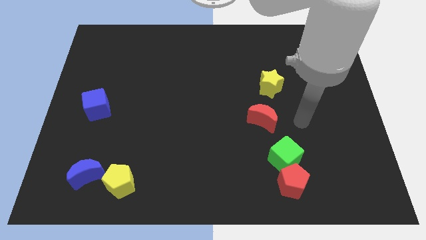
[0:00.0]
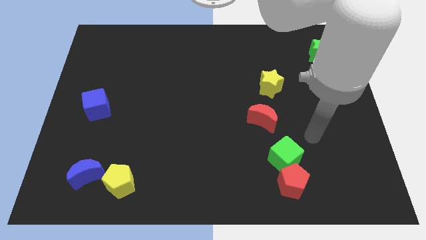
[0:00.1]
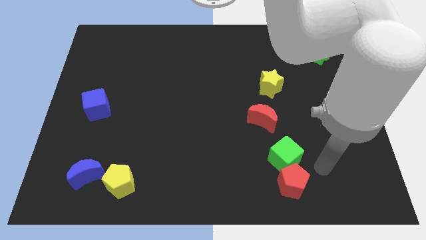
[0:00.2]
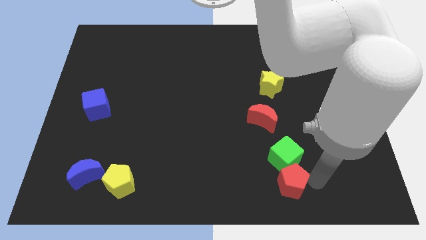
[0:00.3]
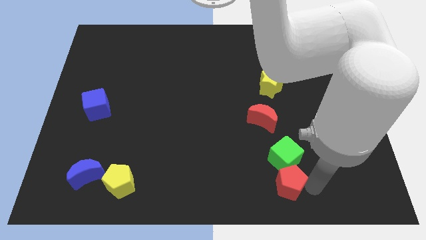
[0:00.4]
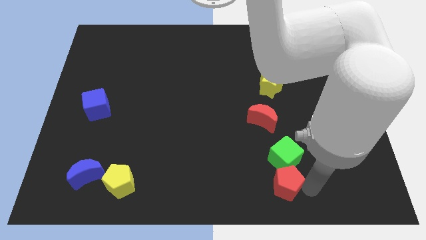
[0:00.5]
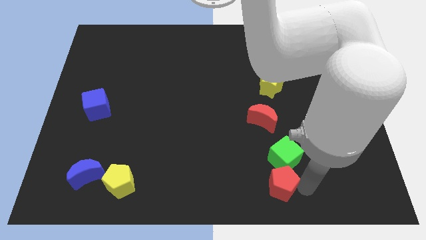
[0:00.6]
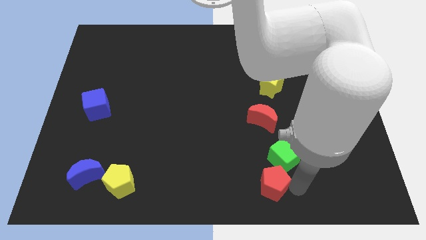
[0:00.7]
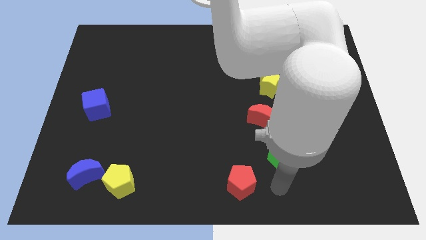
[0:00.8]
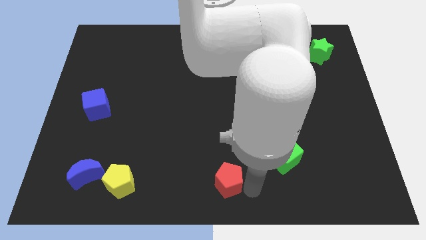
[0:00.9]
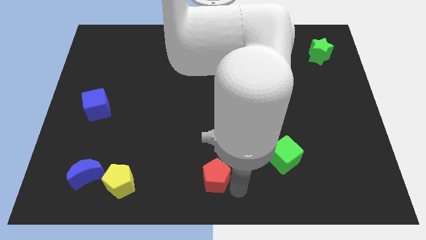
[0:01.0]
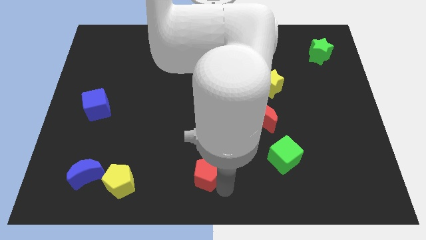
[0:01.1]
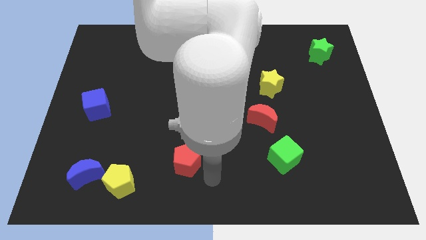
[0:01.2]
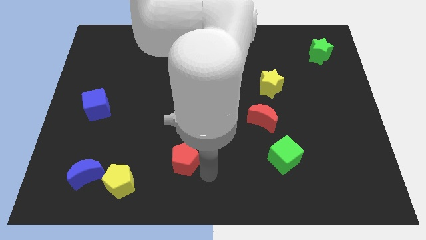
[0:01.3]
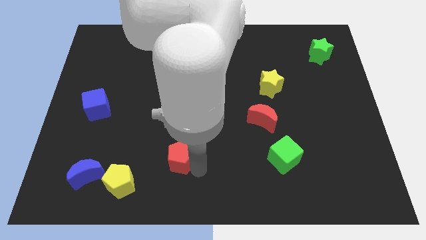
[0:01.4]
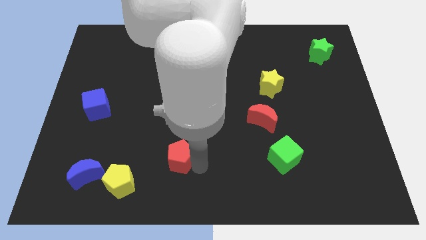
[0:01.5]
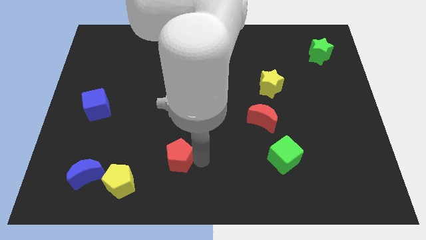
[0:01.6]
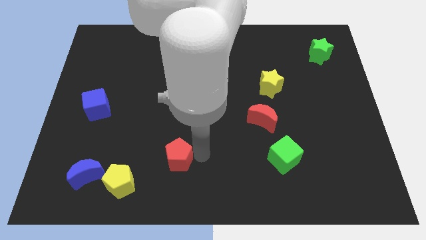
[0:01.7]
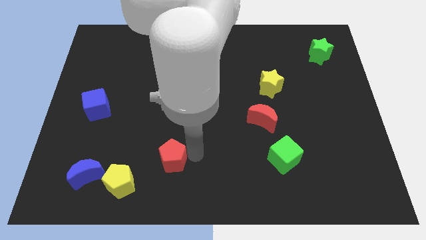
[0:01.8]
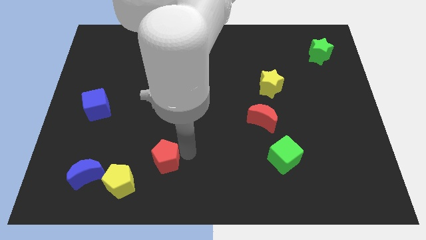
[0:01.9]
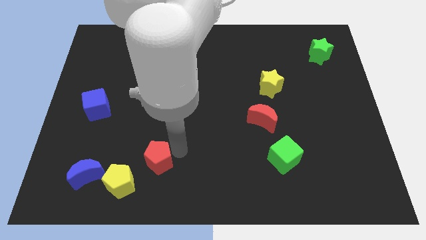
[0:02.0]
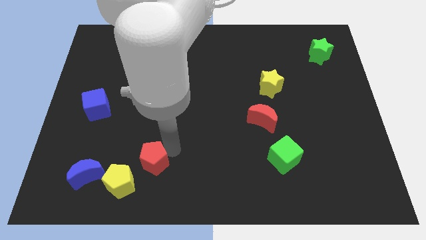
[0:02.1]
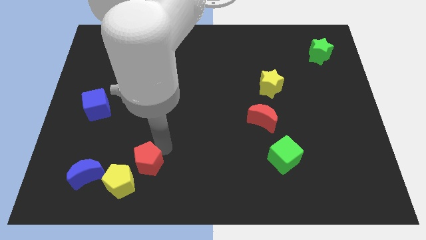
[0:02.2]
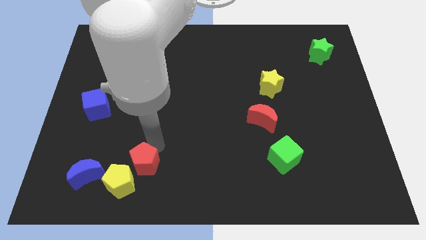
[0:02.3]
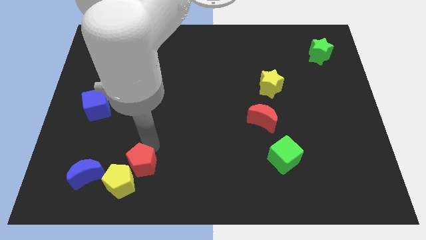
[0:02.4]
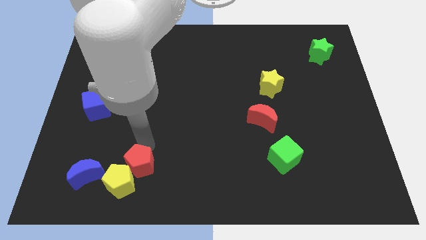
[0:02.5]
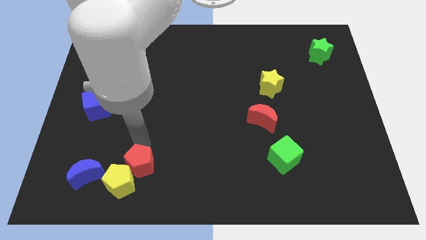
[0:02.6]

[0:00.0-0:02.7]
push the red pentagon close to the yellow pentagon

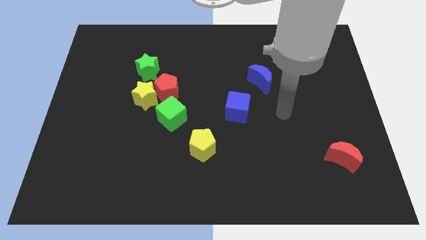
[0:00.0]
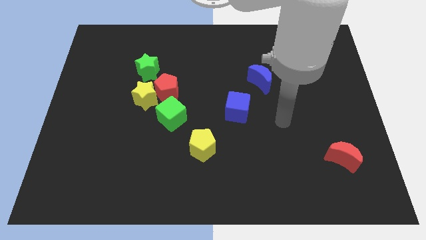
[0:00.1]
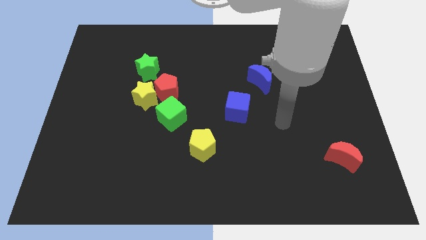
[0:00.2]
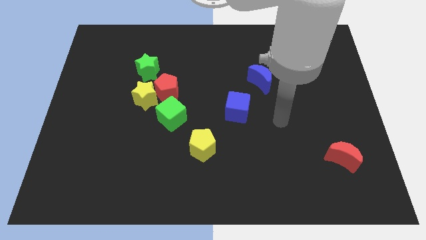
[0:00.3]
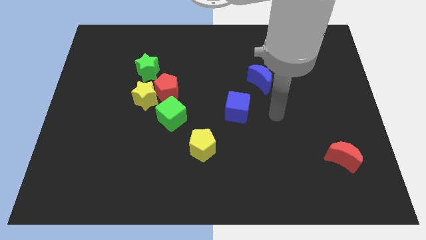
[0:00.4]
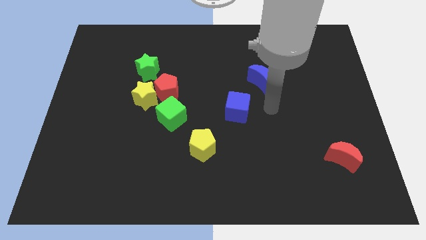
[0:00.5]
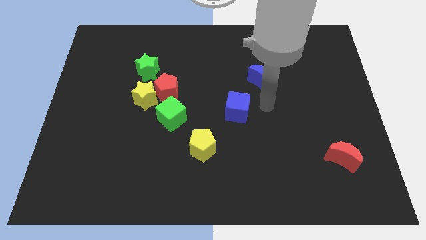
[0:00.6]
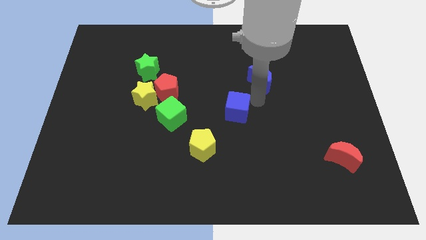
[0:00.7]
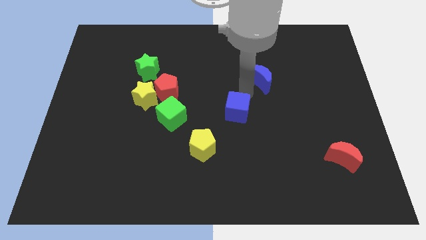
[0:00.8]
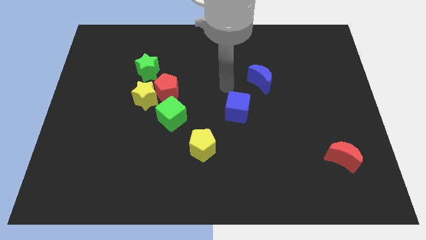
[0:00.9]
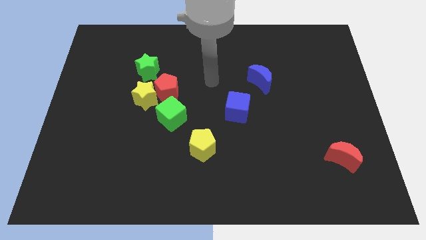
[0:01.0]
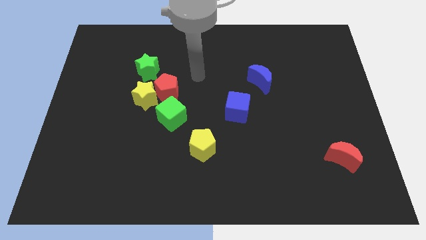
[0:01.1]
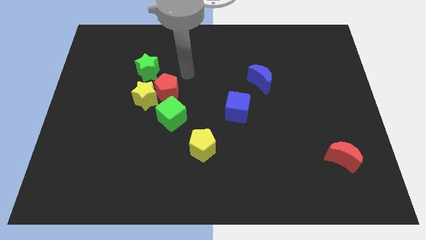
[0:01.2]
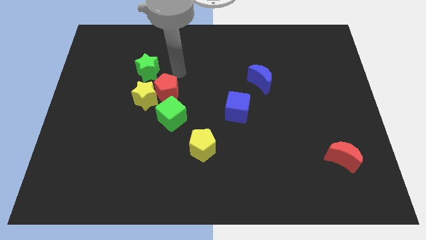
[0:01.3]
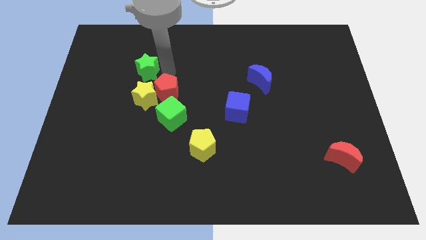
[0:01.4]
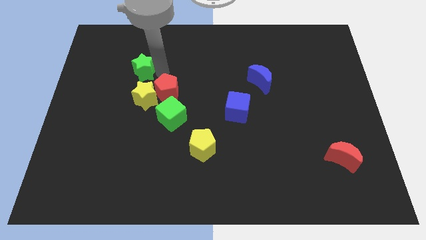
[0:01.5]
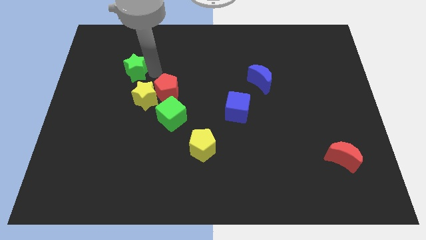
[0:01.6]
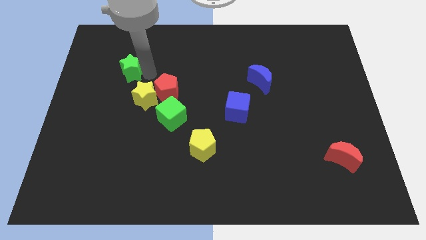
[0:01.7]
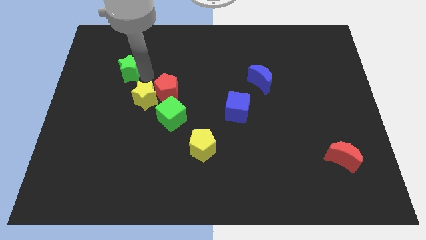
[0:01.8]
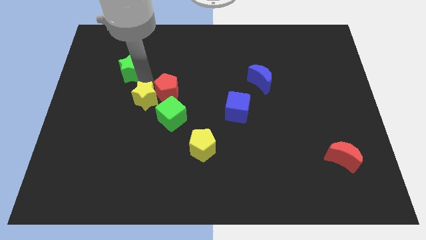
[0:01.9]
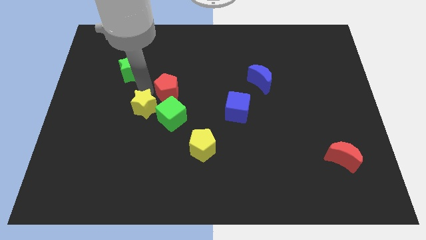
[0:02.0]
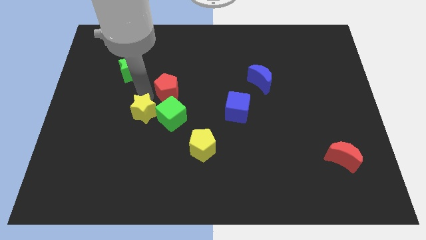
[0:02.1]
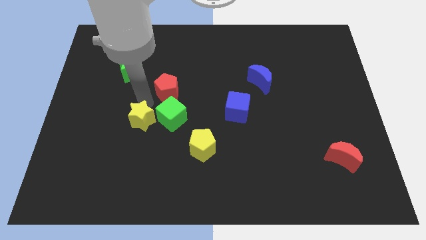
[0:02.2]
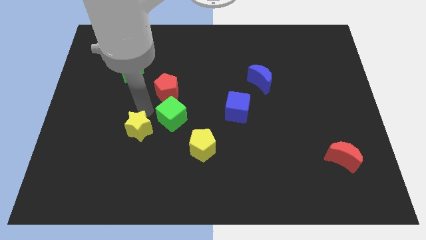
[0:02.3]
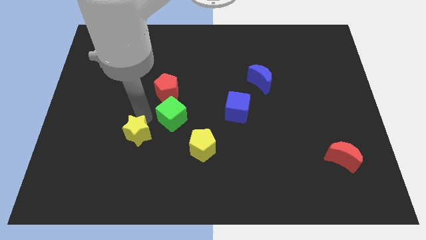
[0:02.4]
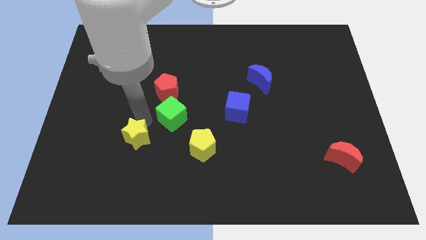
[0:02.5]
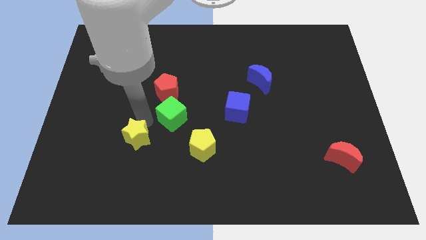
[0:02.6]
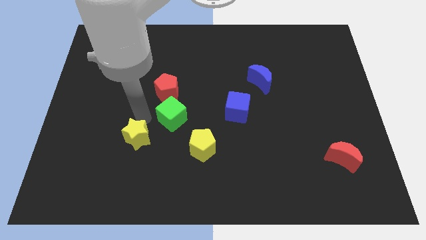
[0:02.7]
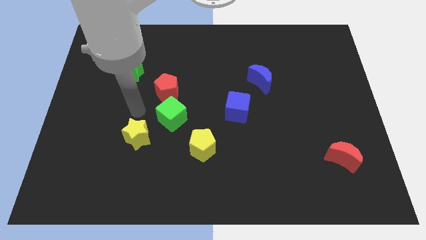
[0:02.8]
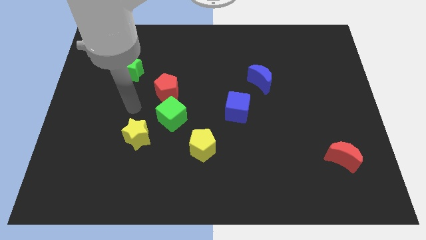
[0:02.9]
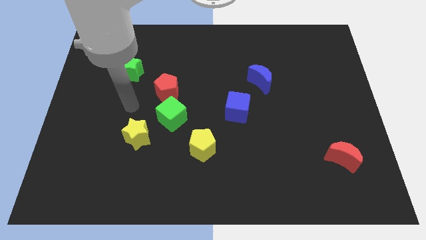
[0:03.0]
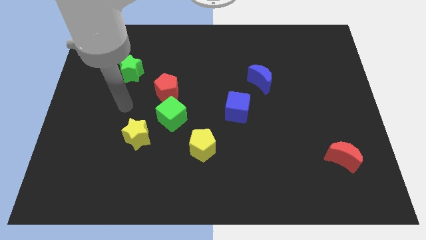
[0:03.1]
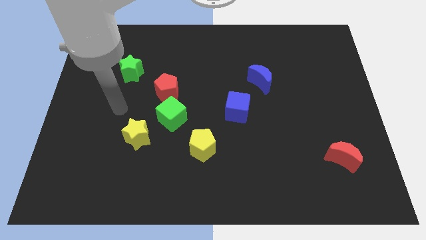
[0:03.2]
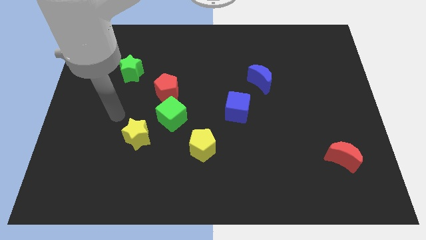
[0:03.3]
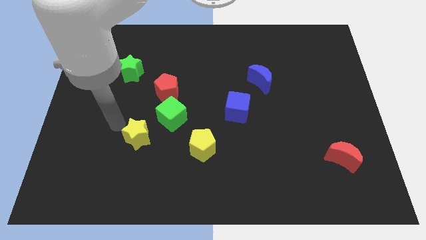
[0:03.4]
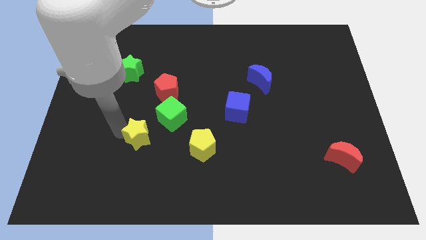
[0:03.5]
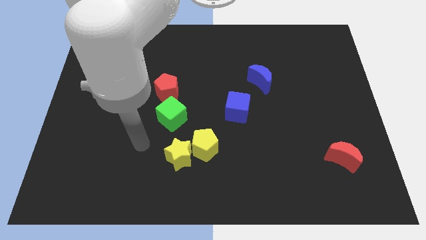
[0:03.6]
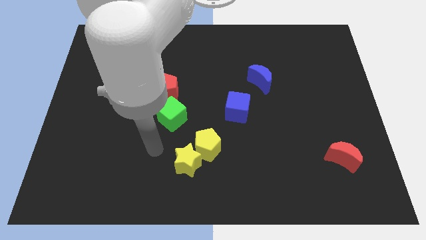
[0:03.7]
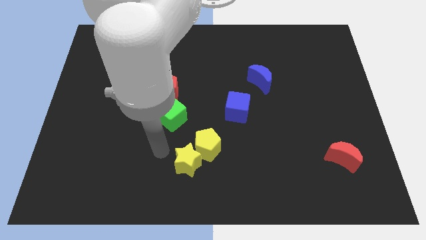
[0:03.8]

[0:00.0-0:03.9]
move the yellow star to the yellow pentagon

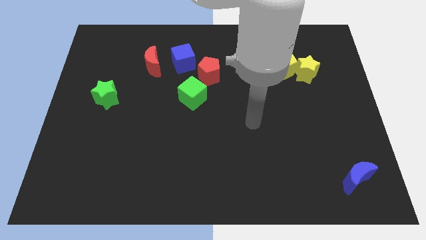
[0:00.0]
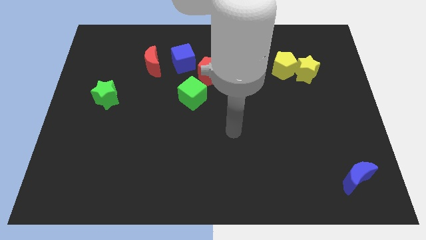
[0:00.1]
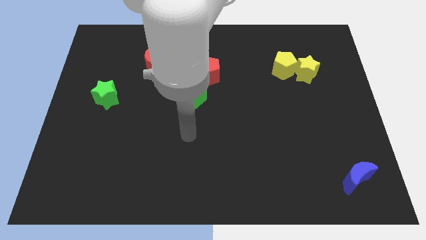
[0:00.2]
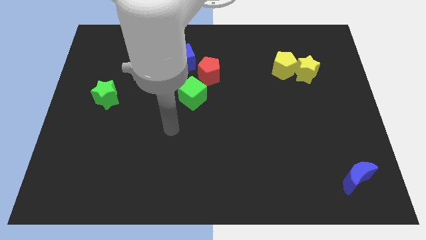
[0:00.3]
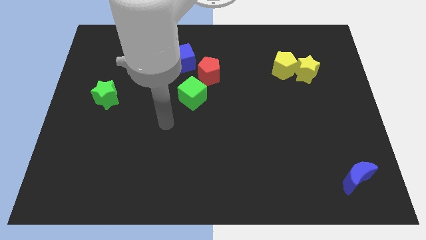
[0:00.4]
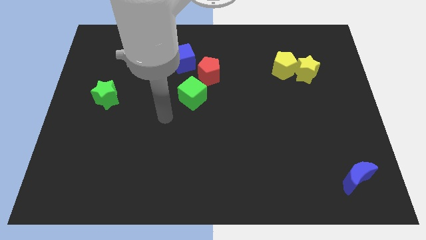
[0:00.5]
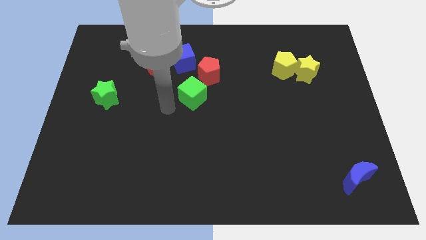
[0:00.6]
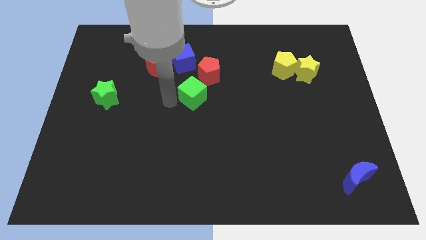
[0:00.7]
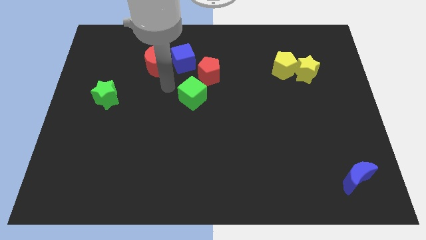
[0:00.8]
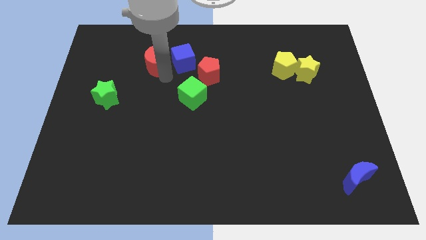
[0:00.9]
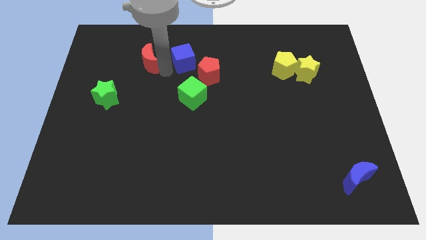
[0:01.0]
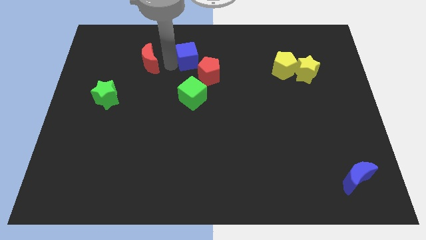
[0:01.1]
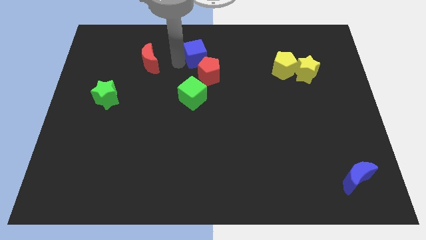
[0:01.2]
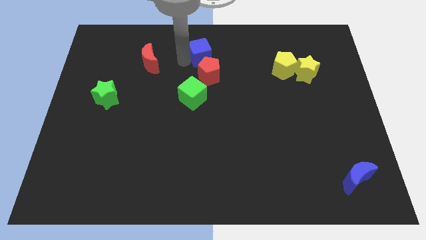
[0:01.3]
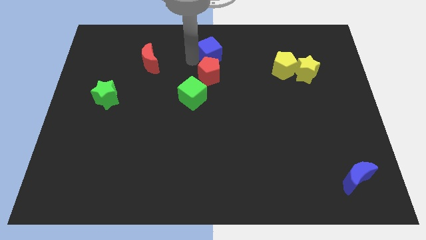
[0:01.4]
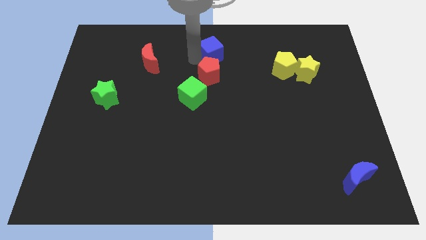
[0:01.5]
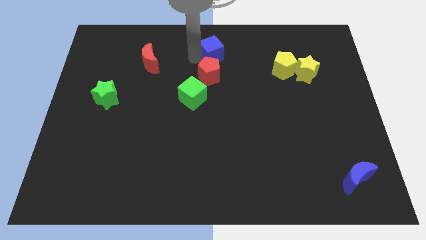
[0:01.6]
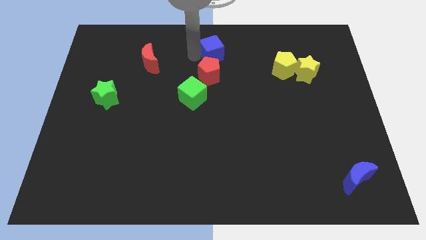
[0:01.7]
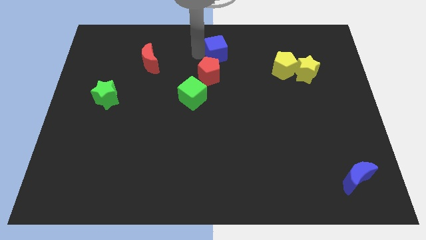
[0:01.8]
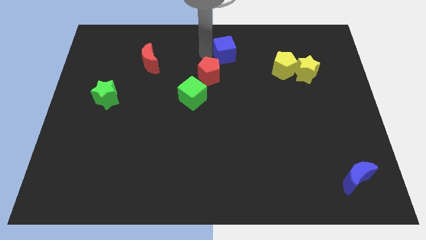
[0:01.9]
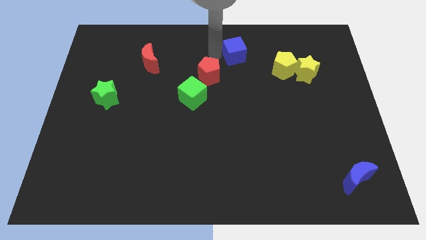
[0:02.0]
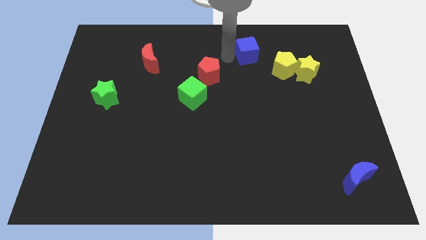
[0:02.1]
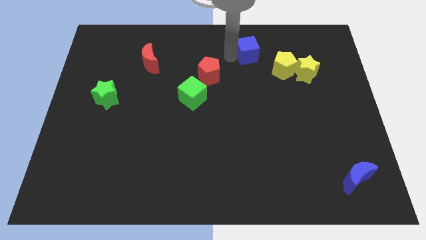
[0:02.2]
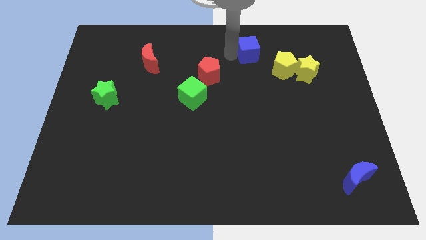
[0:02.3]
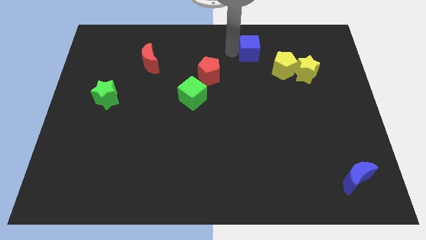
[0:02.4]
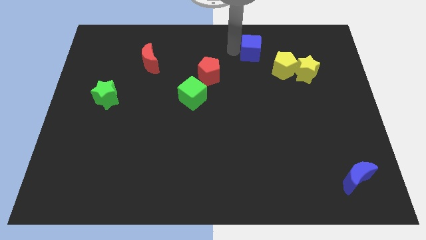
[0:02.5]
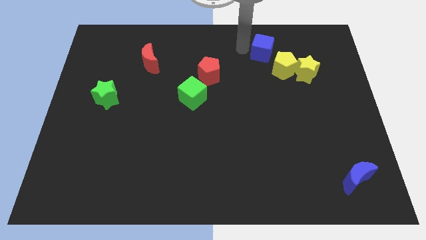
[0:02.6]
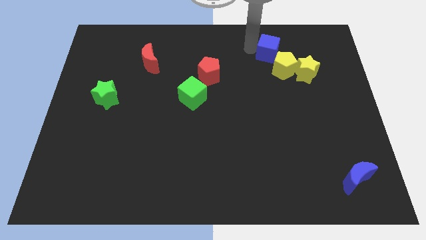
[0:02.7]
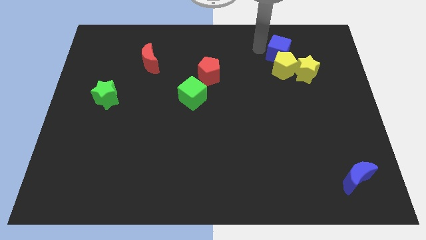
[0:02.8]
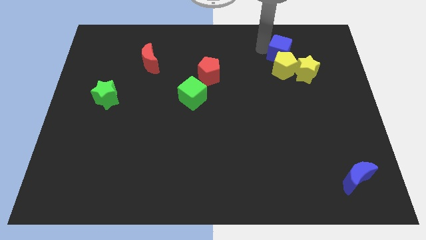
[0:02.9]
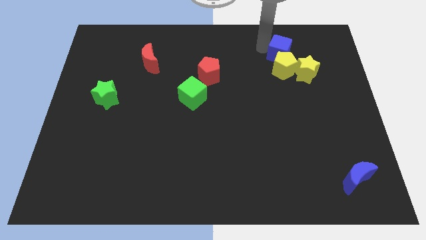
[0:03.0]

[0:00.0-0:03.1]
push the blue cube next to the yellow pentagon
